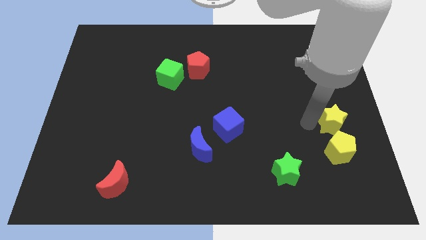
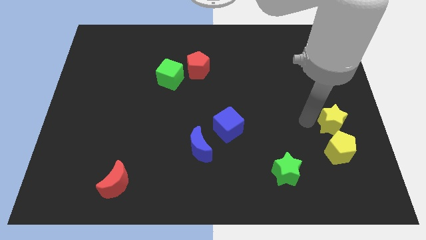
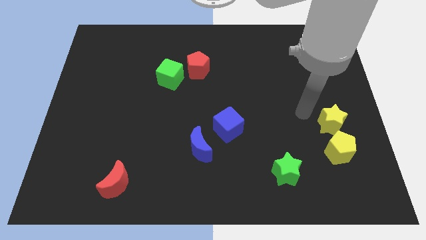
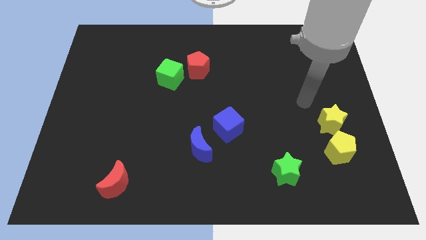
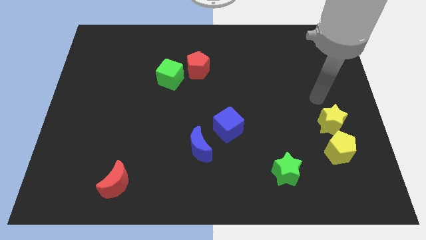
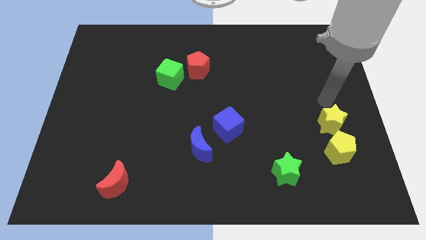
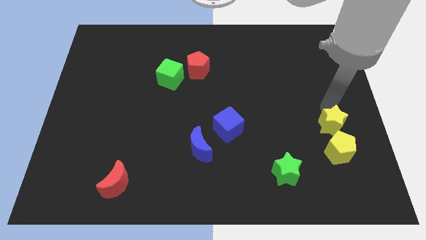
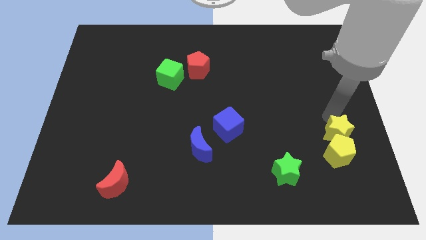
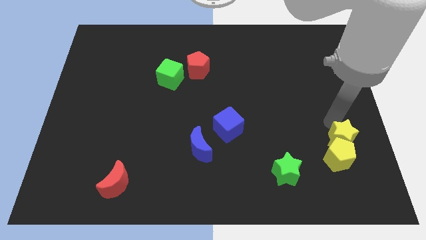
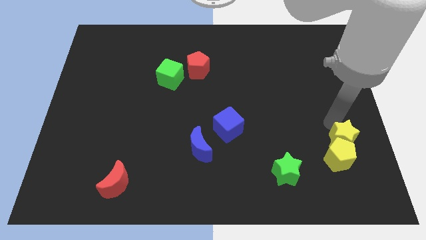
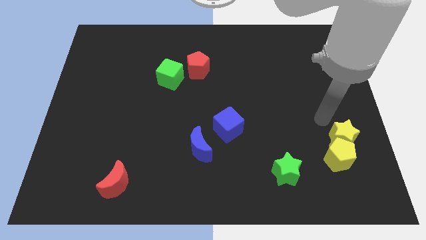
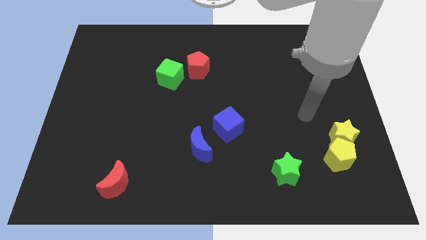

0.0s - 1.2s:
push the yellow star into the yellow pentagon

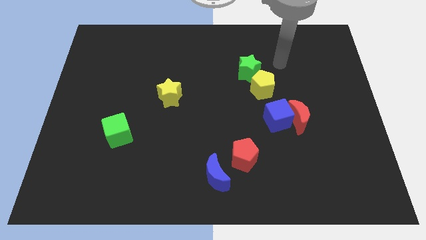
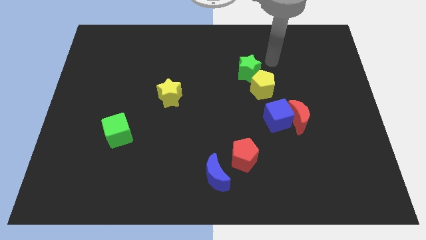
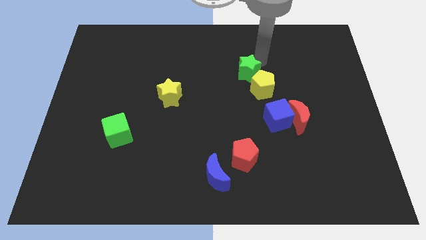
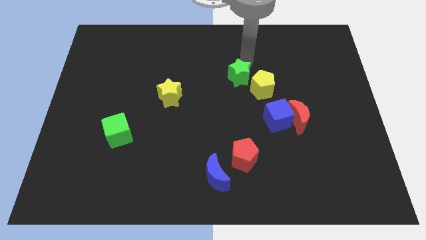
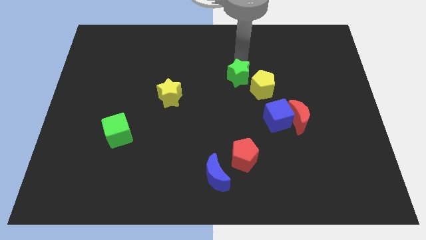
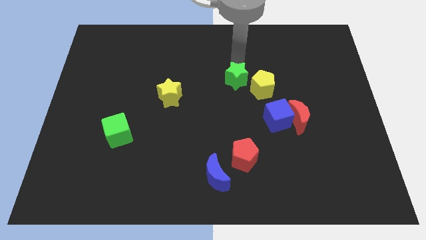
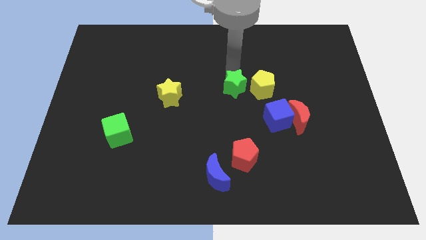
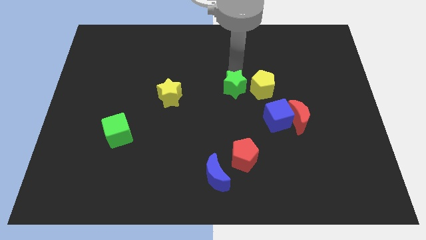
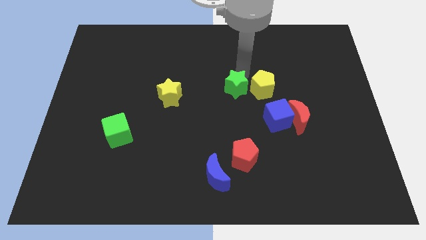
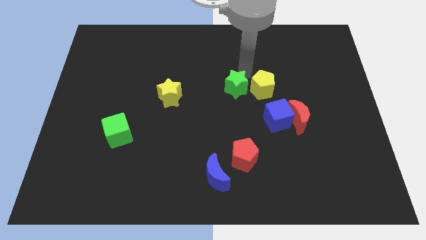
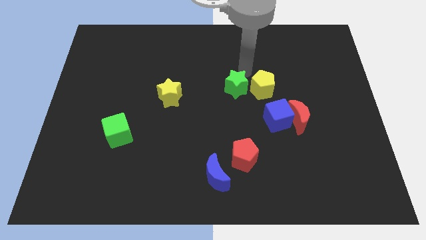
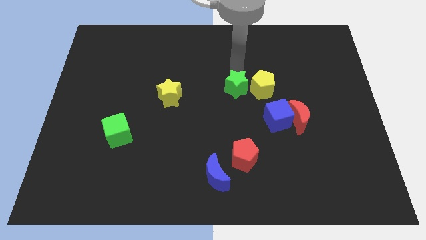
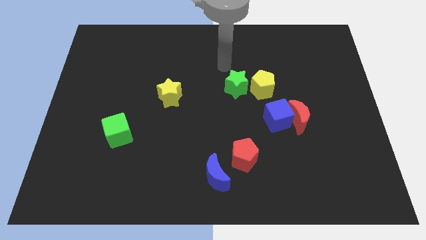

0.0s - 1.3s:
place the green star left to the yellow pentagon

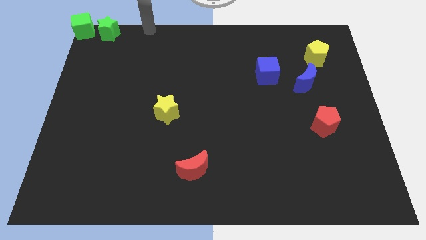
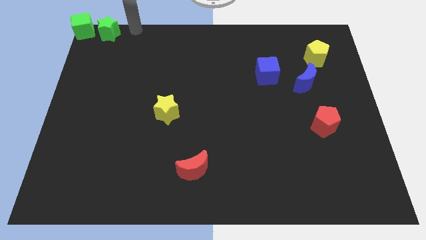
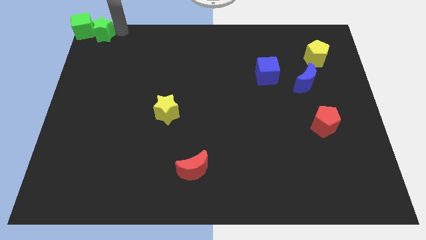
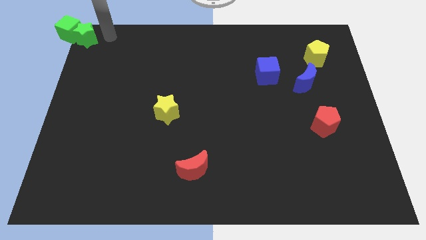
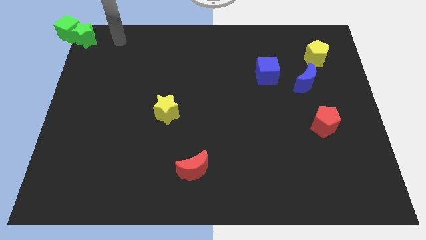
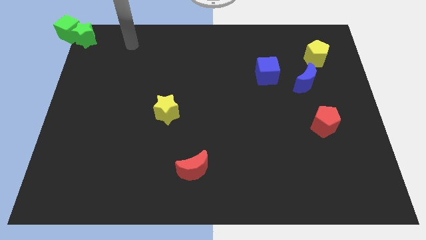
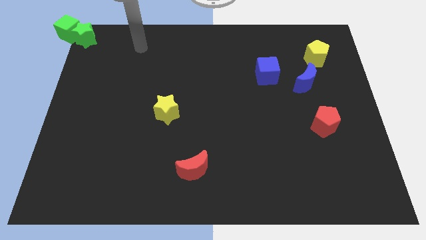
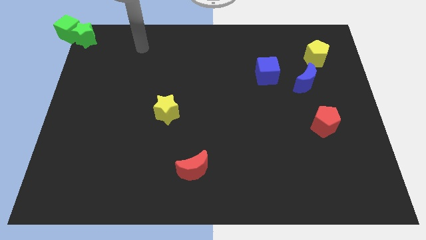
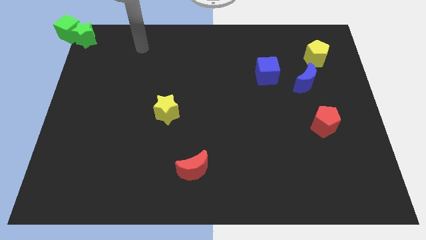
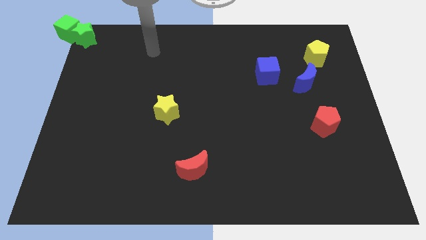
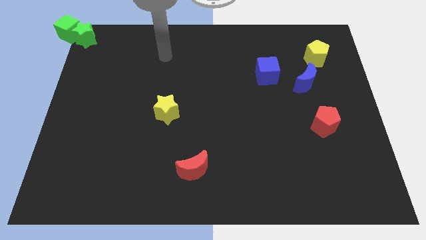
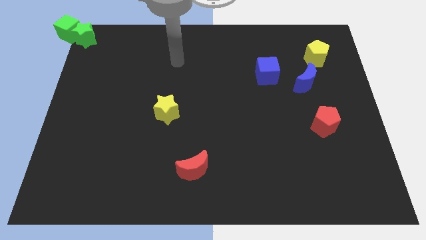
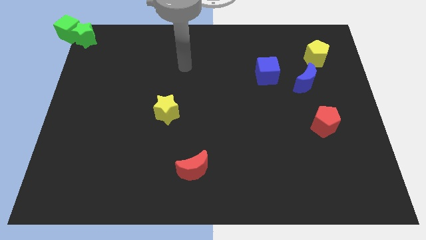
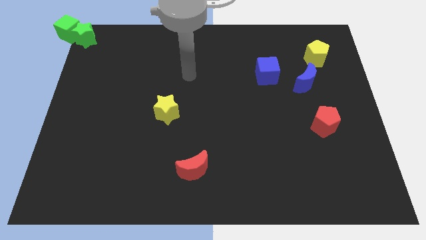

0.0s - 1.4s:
push the green star into the green cube

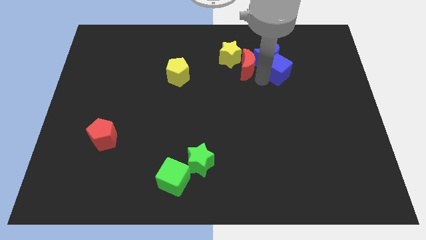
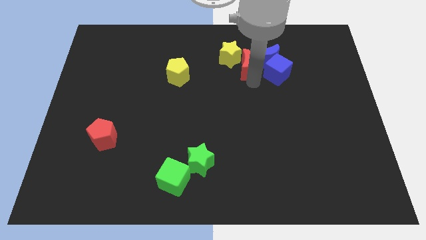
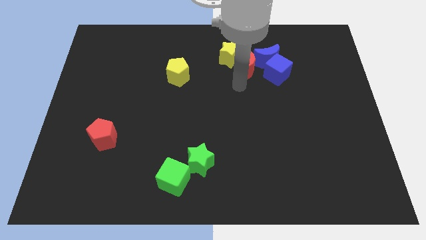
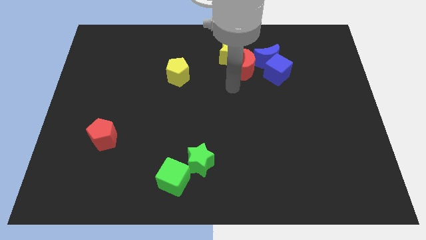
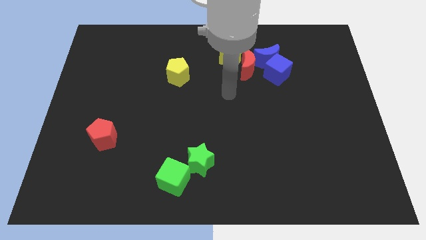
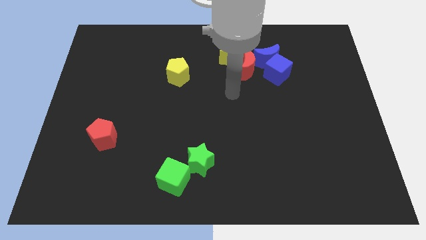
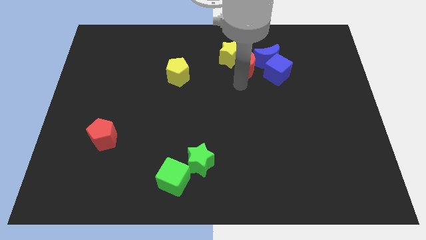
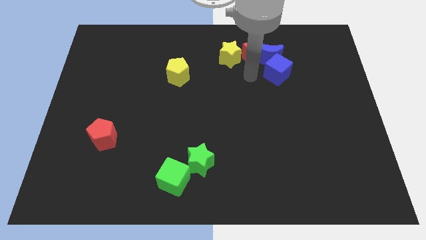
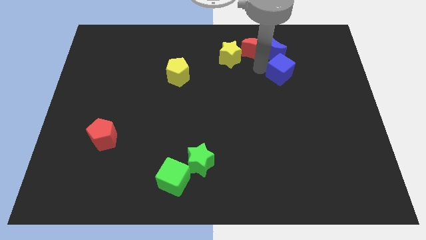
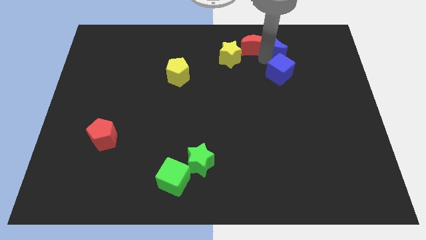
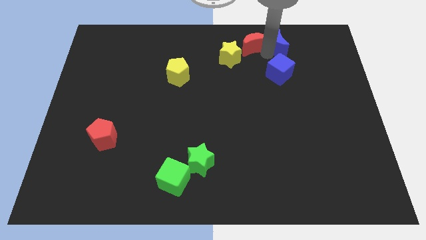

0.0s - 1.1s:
move the red crescent to the left of the blue crescent

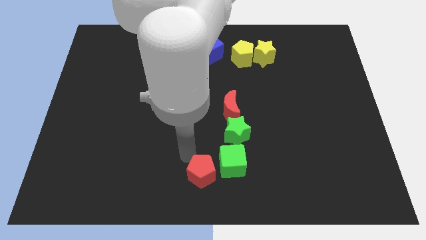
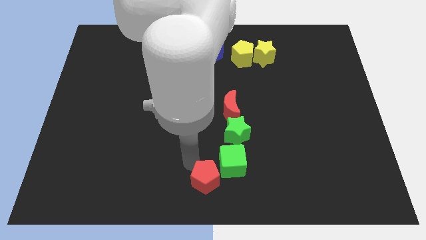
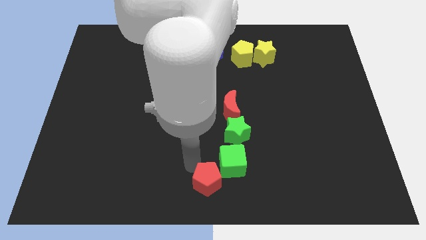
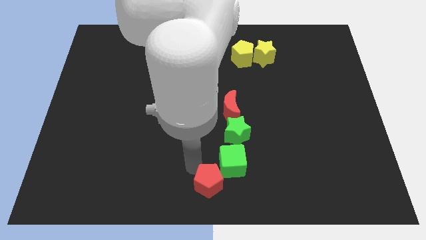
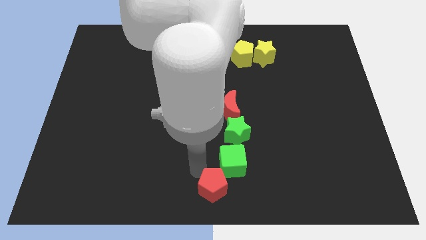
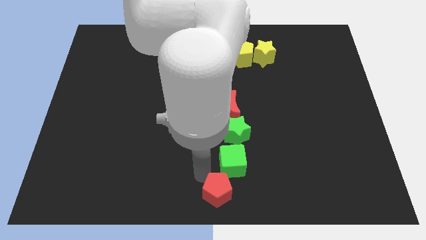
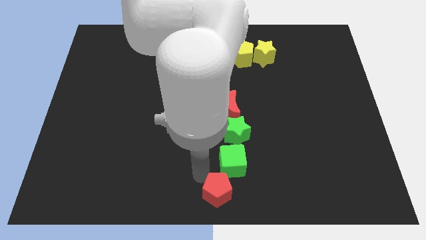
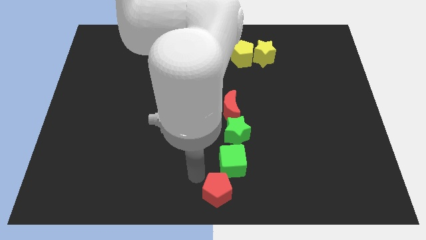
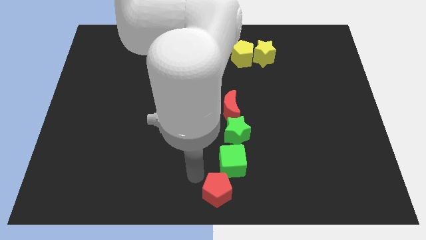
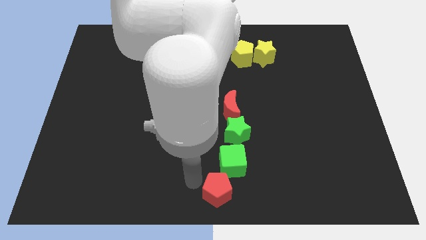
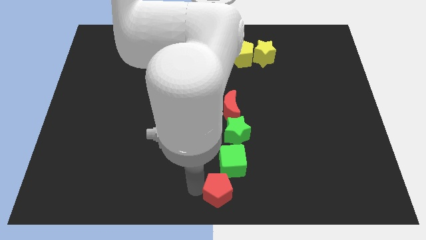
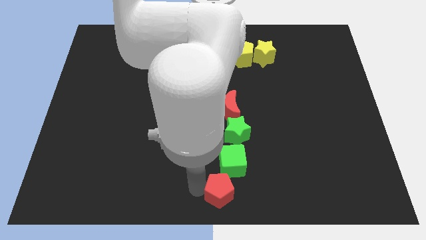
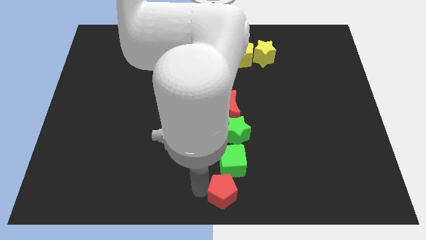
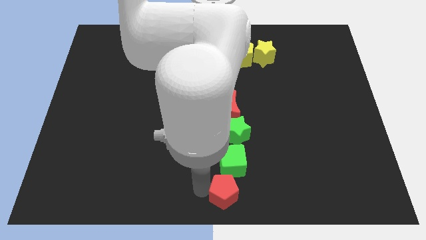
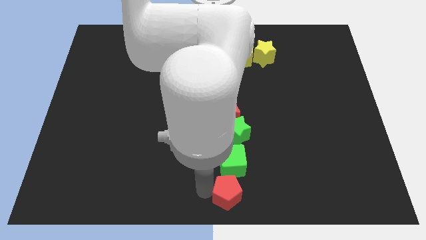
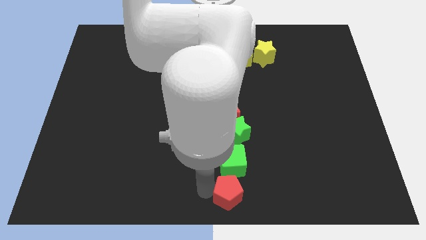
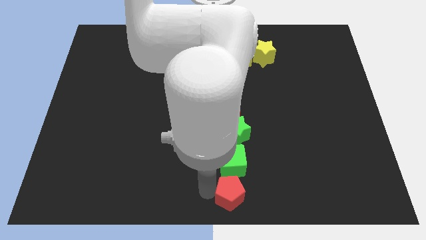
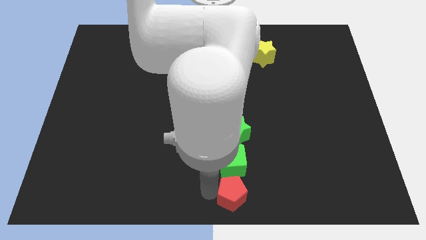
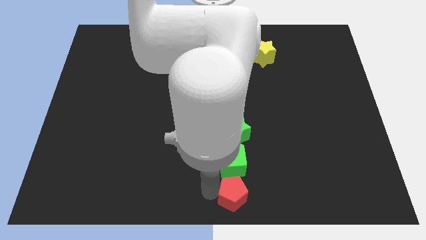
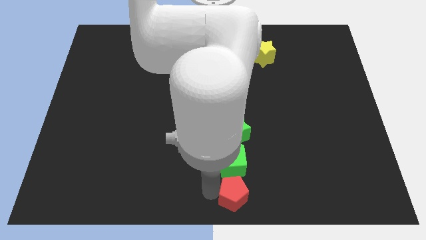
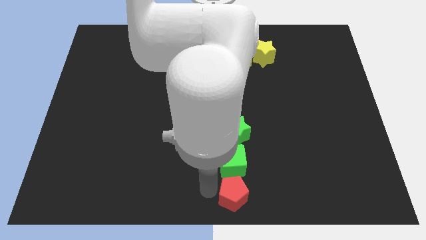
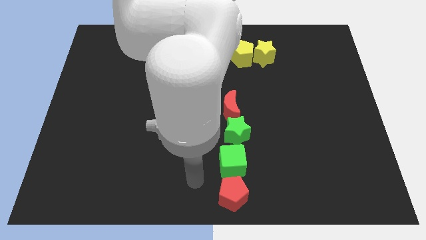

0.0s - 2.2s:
push the red pentagon below the green cube

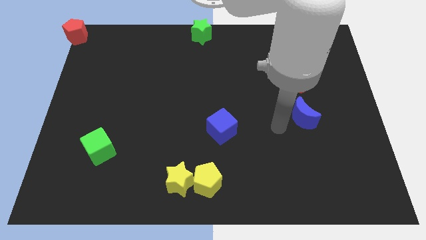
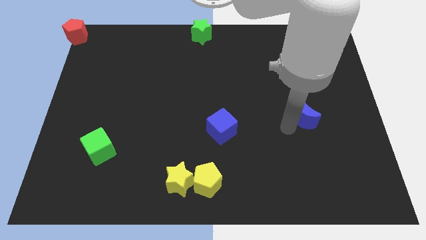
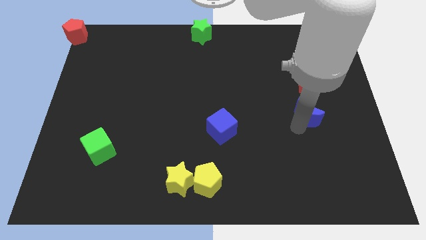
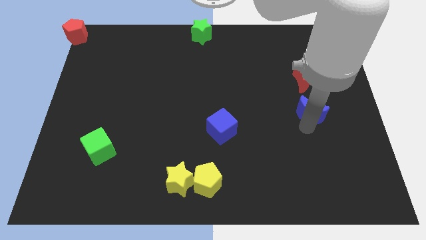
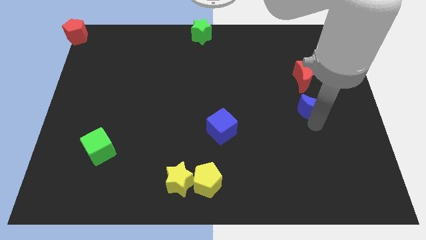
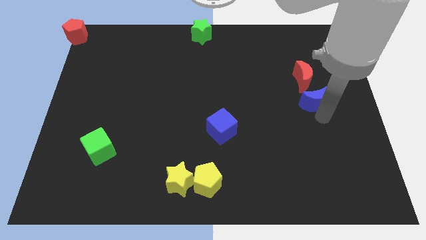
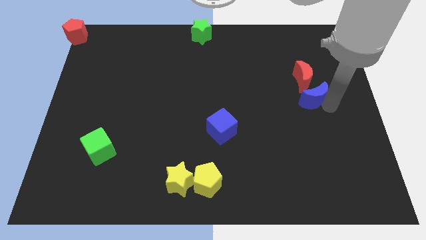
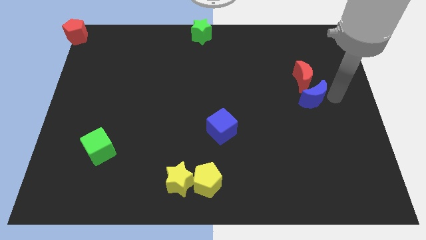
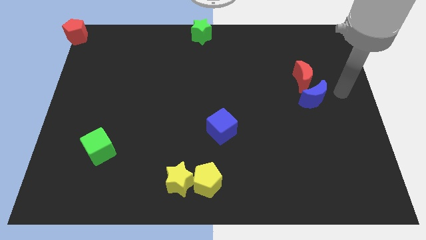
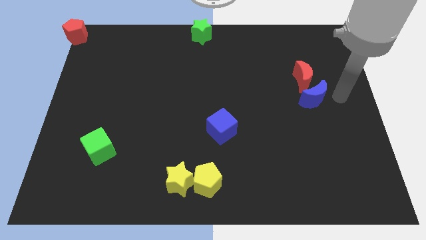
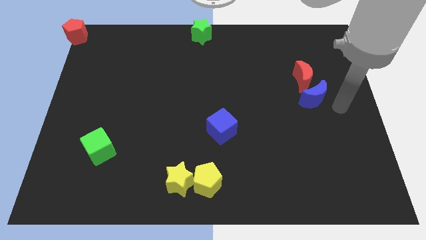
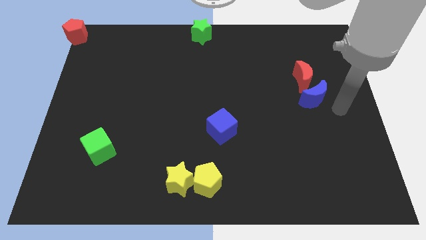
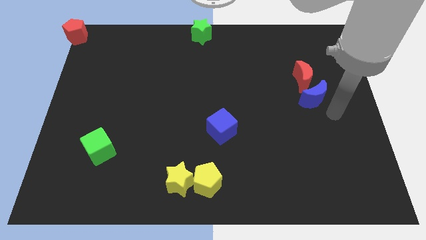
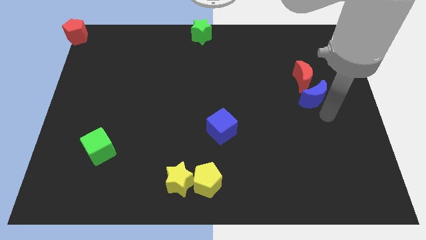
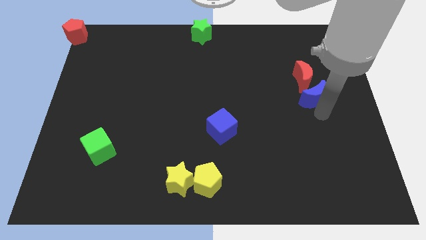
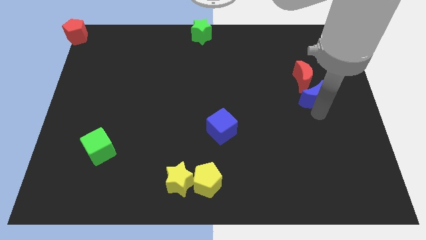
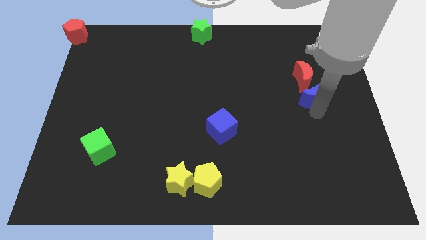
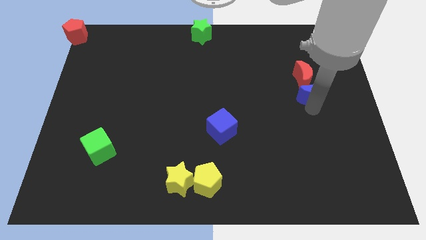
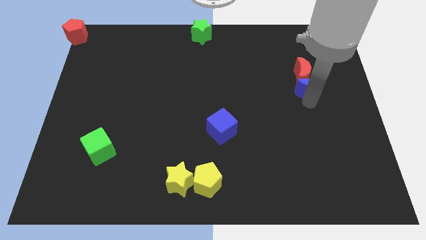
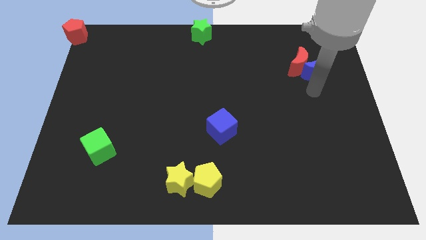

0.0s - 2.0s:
push the blue moon into the red moon
